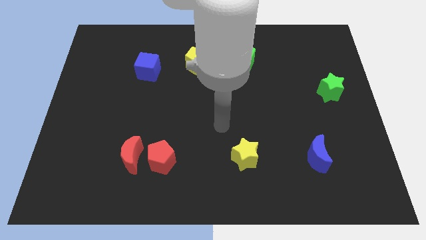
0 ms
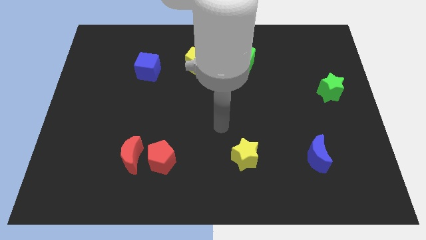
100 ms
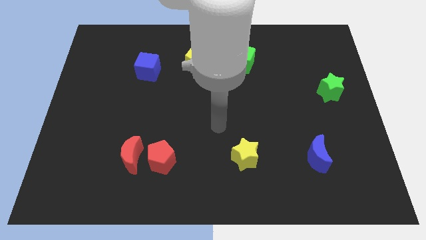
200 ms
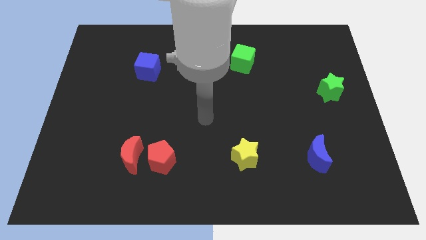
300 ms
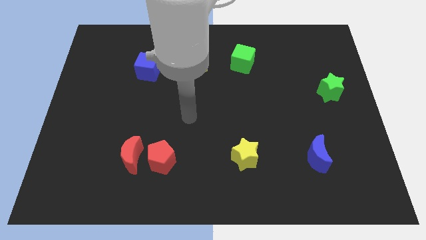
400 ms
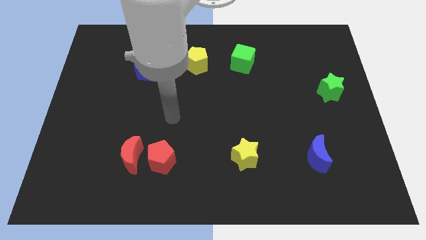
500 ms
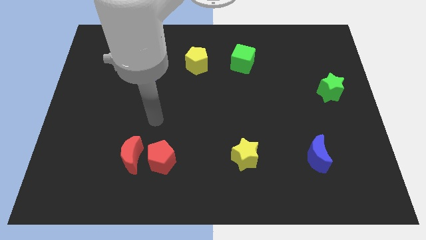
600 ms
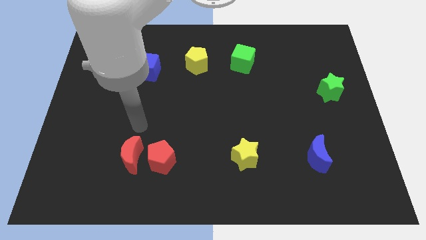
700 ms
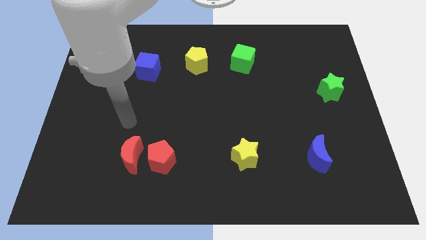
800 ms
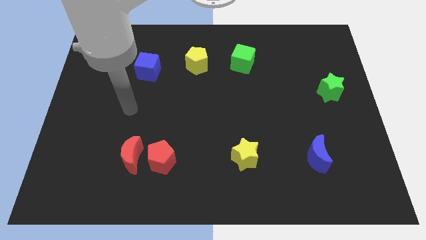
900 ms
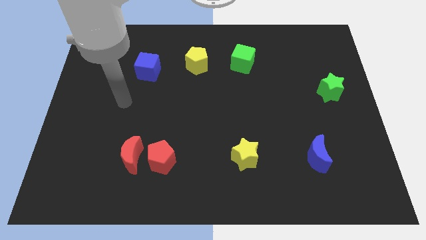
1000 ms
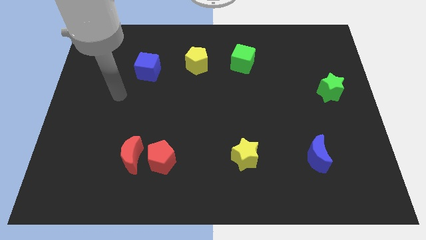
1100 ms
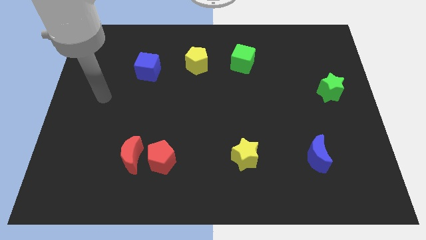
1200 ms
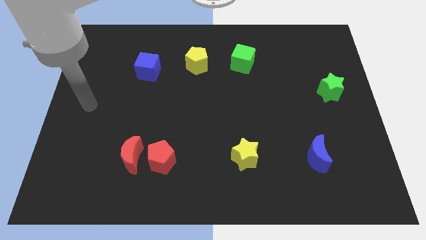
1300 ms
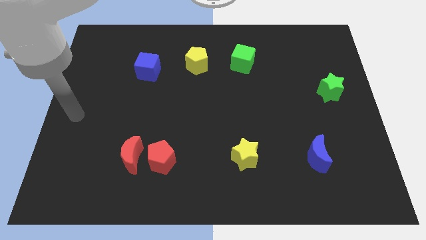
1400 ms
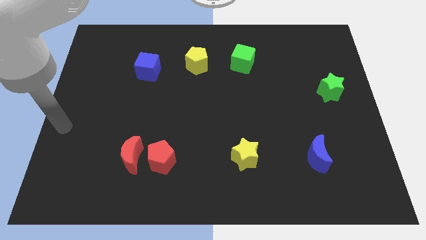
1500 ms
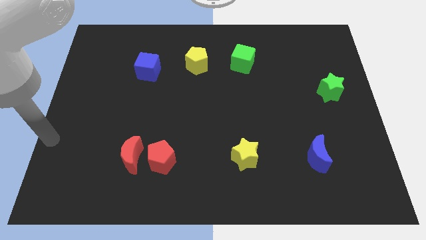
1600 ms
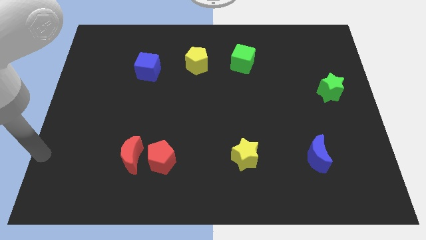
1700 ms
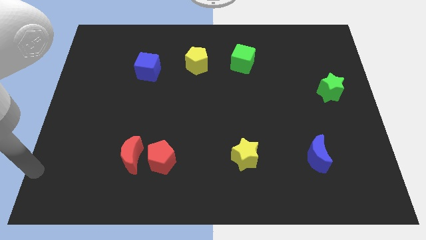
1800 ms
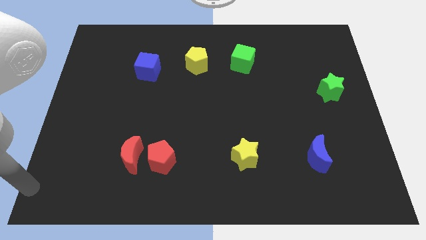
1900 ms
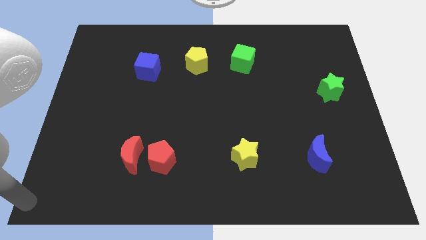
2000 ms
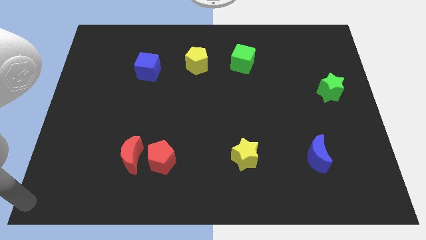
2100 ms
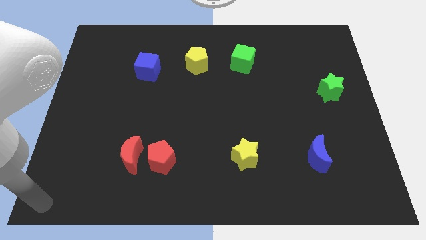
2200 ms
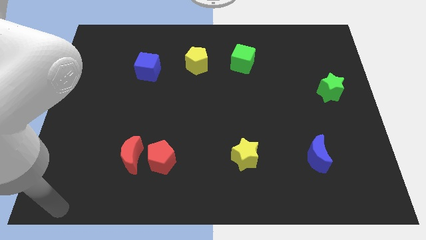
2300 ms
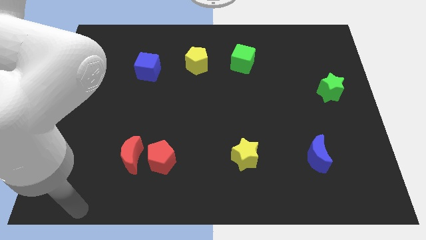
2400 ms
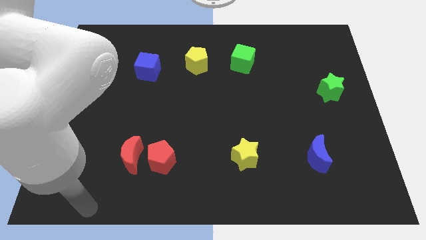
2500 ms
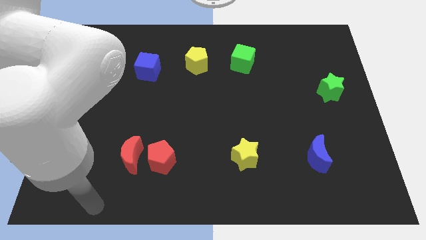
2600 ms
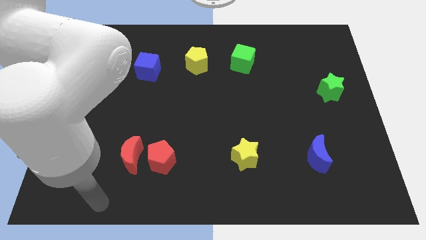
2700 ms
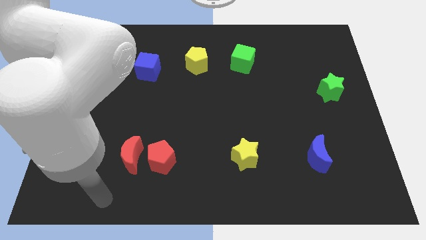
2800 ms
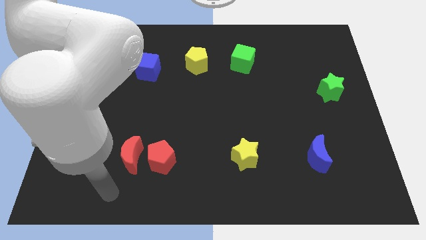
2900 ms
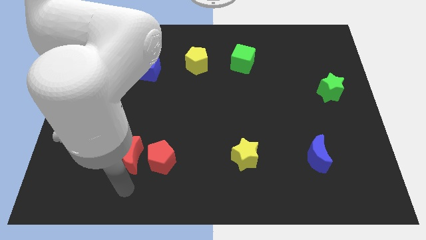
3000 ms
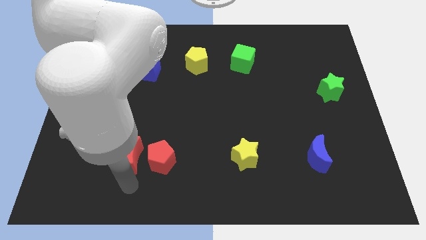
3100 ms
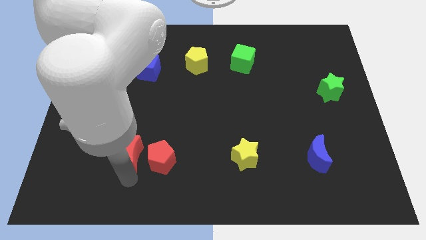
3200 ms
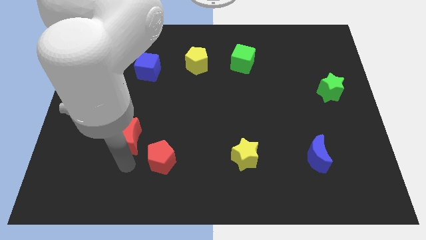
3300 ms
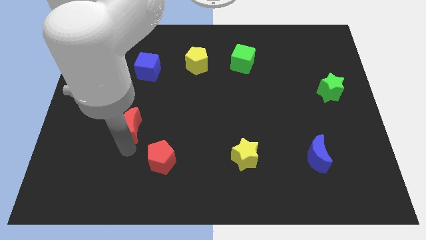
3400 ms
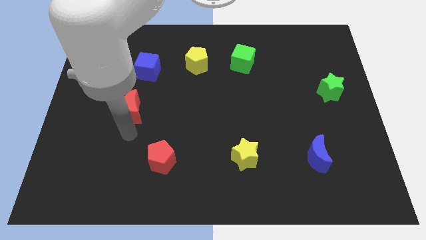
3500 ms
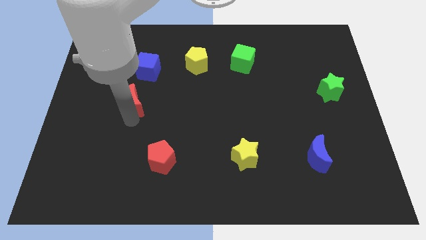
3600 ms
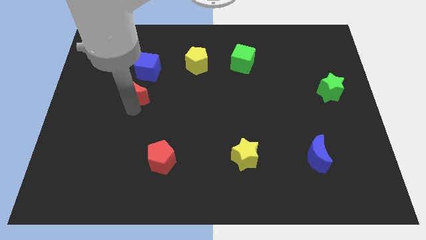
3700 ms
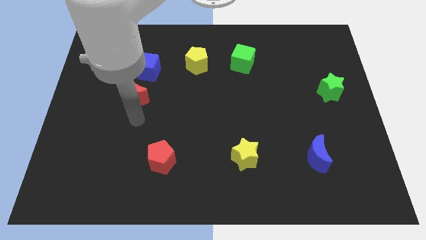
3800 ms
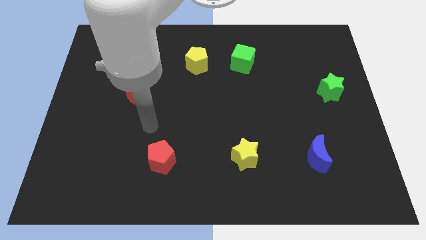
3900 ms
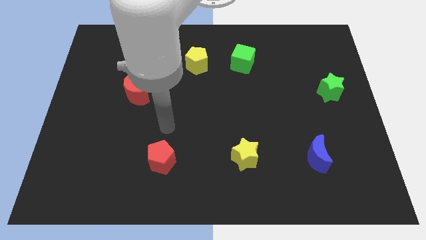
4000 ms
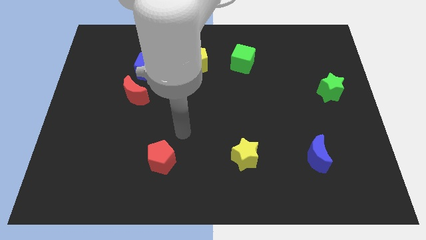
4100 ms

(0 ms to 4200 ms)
push the red moon upward

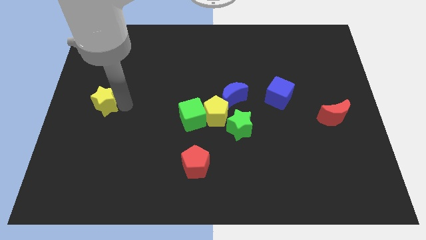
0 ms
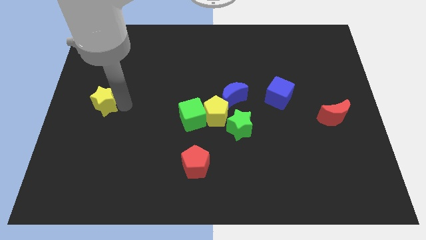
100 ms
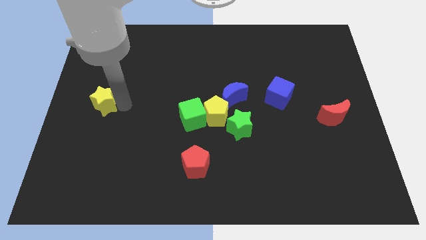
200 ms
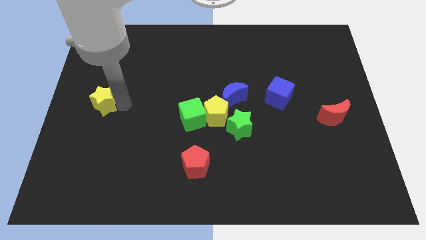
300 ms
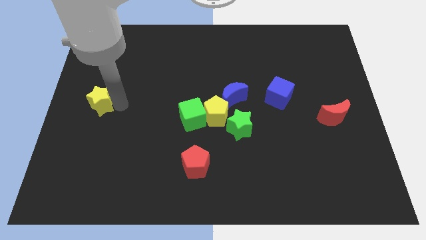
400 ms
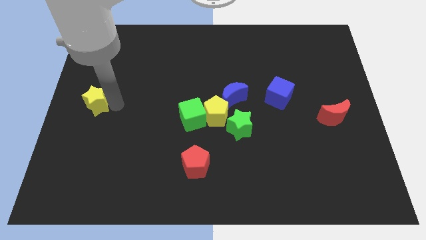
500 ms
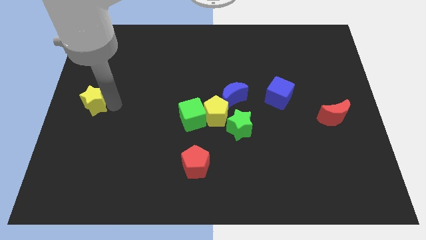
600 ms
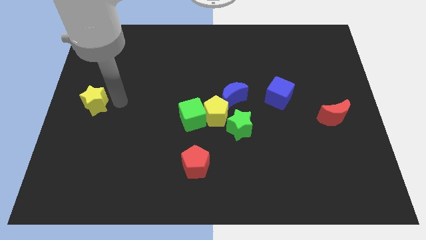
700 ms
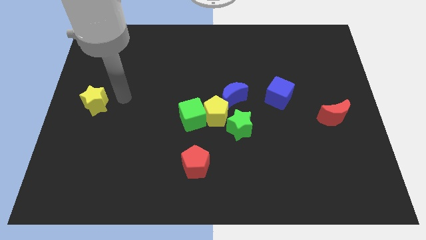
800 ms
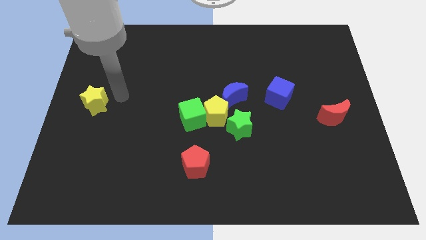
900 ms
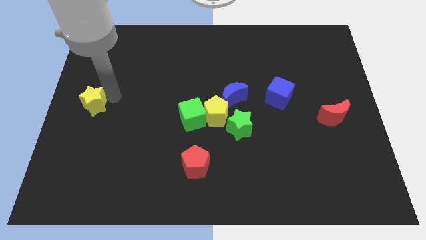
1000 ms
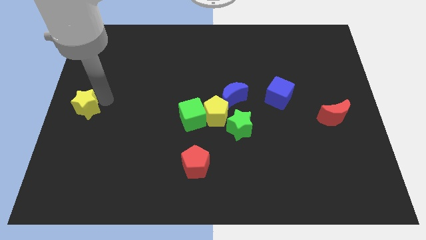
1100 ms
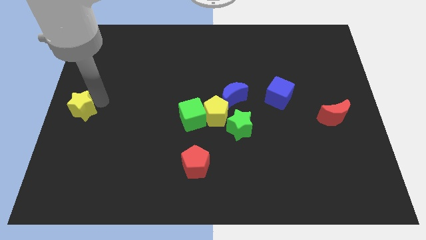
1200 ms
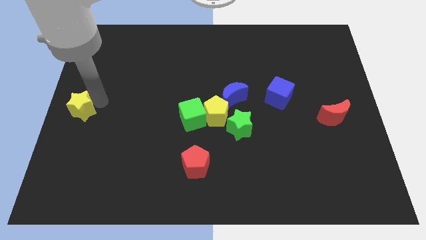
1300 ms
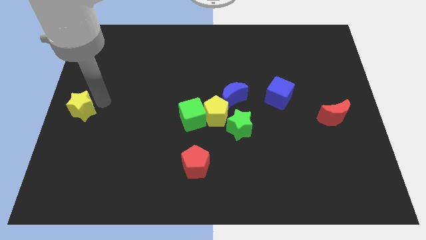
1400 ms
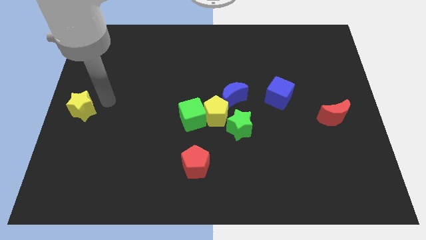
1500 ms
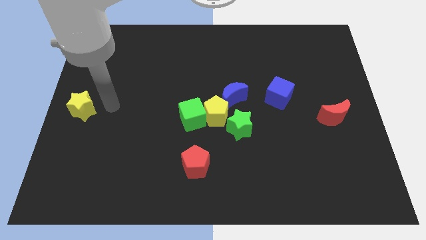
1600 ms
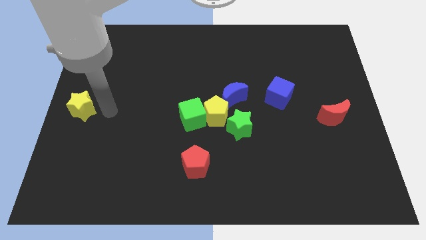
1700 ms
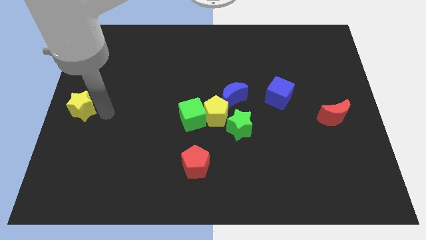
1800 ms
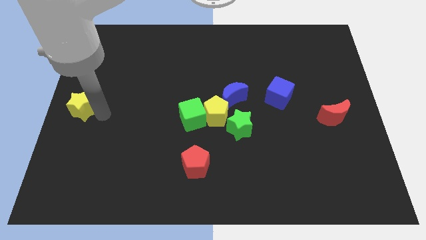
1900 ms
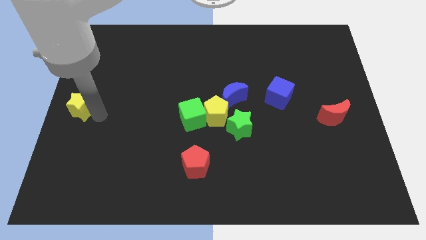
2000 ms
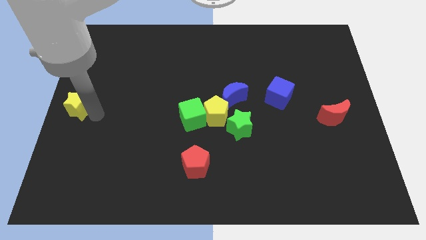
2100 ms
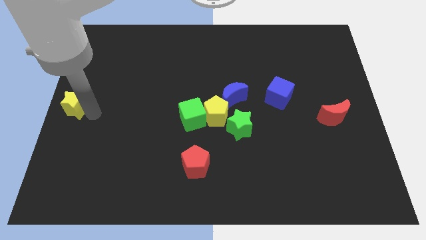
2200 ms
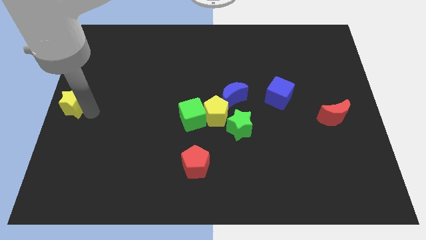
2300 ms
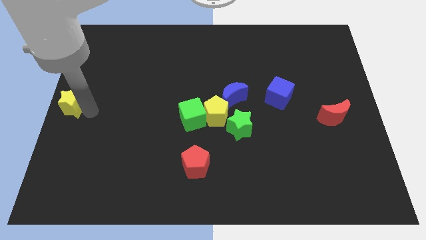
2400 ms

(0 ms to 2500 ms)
place the yellow star towards left center of the board

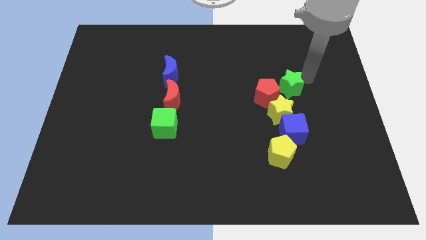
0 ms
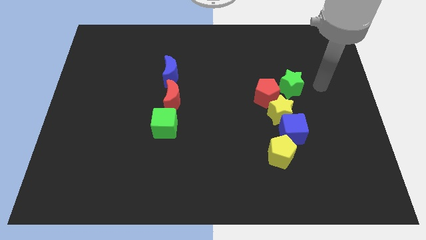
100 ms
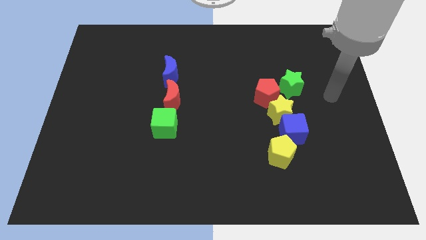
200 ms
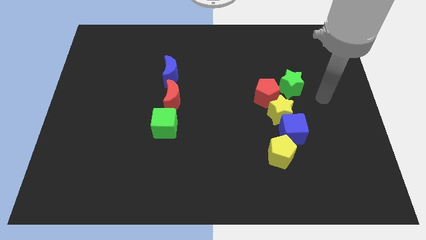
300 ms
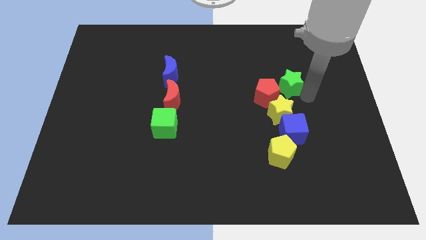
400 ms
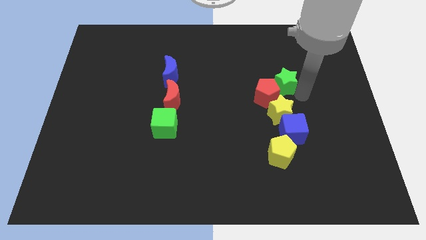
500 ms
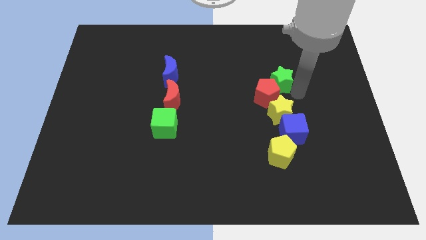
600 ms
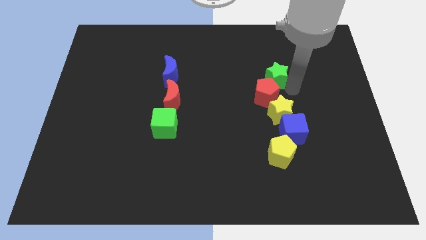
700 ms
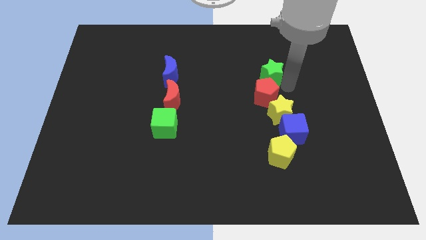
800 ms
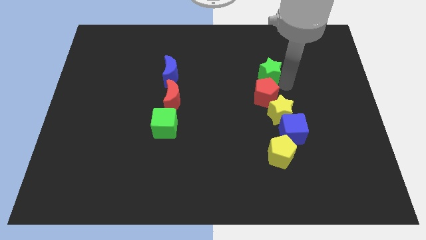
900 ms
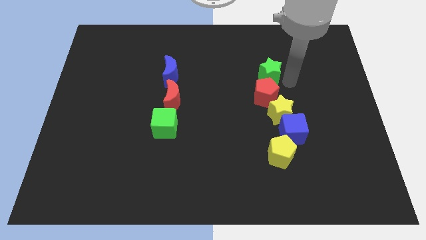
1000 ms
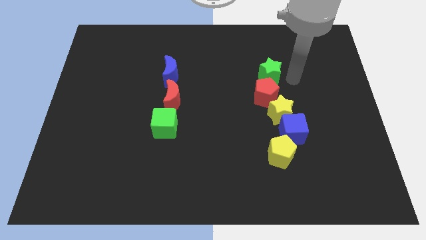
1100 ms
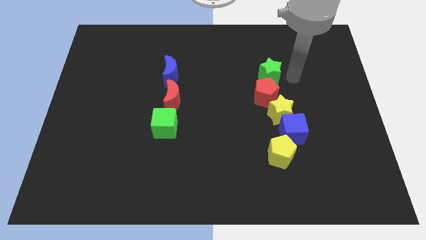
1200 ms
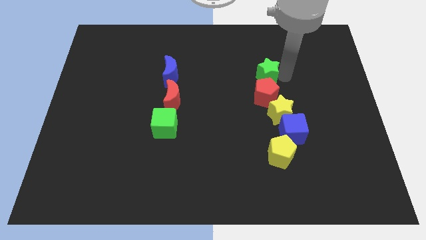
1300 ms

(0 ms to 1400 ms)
place the green star above the red pentagon

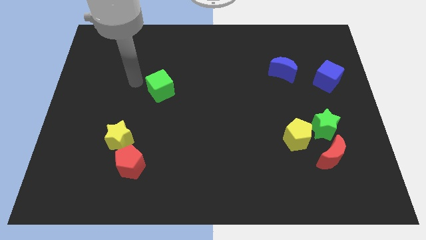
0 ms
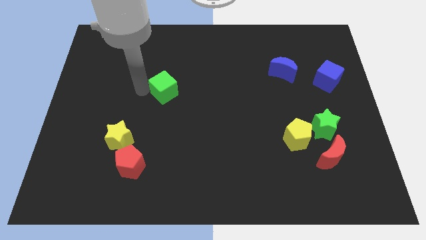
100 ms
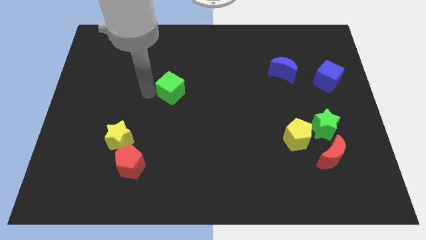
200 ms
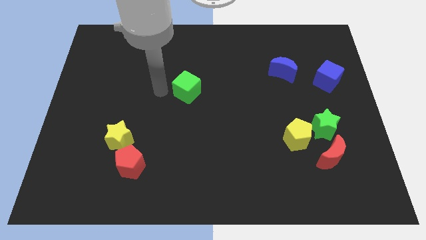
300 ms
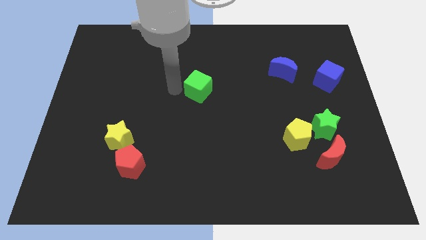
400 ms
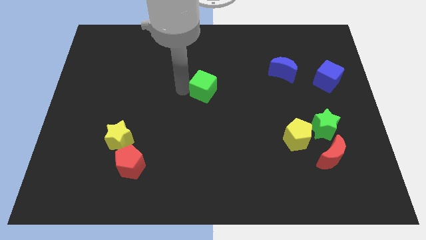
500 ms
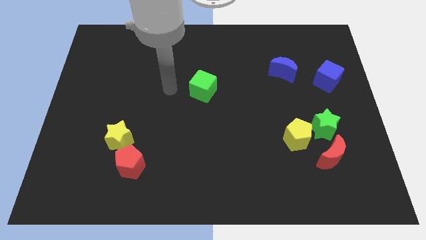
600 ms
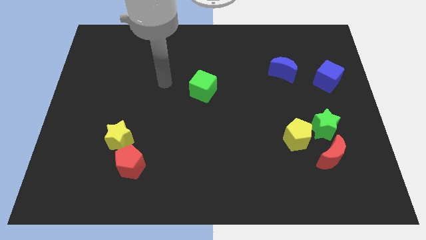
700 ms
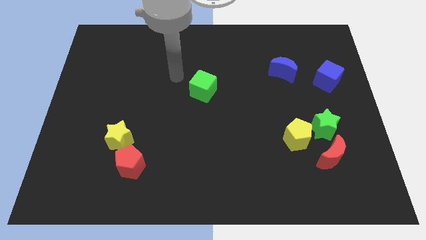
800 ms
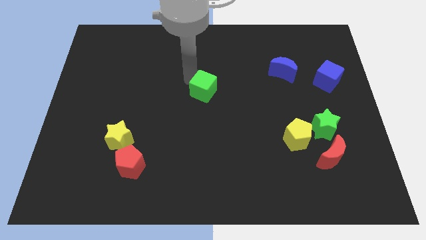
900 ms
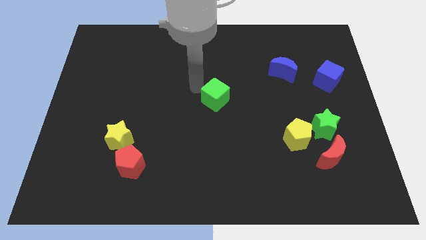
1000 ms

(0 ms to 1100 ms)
move green cube to the center
